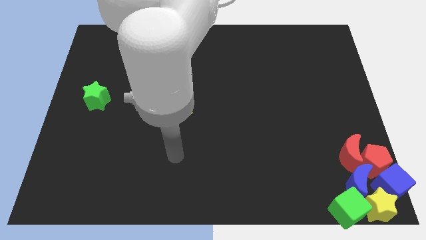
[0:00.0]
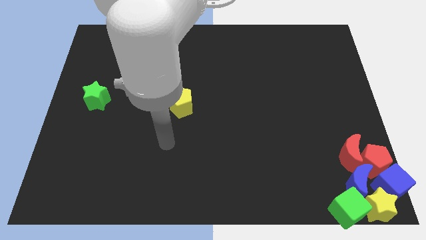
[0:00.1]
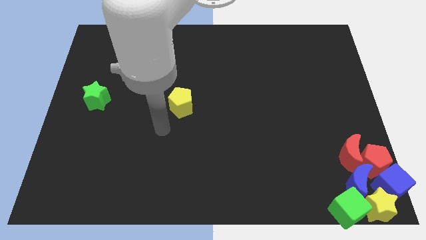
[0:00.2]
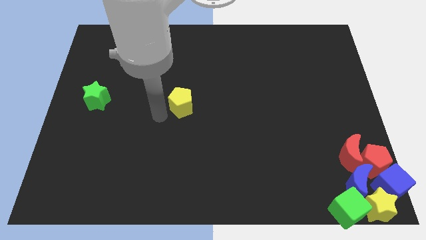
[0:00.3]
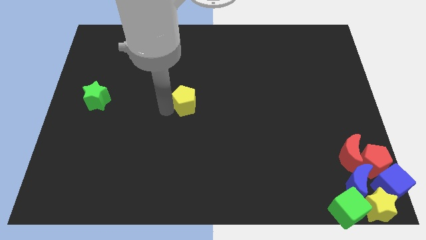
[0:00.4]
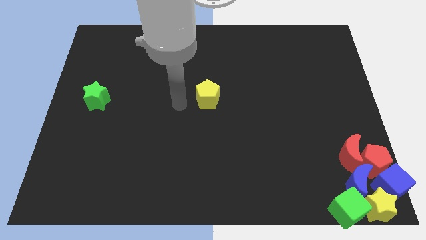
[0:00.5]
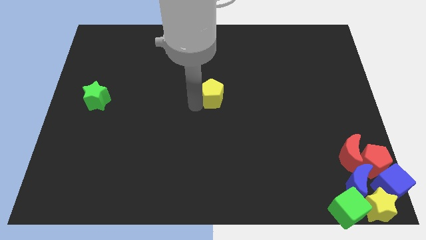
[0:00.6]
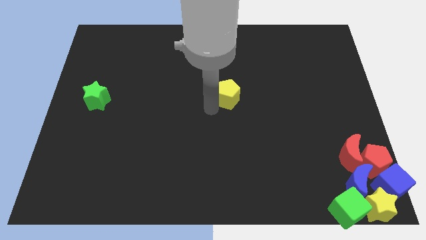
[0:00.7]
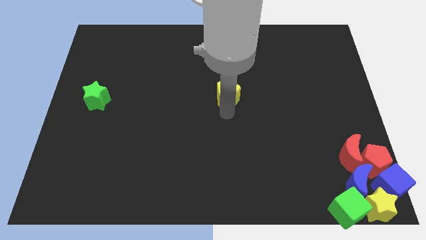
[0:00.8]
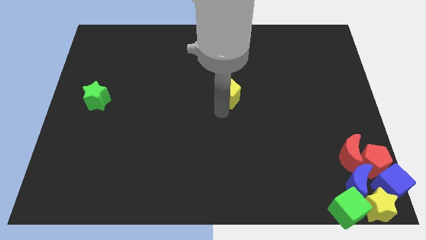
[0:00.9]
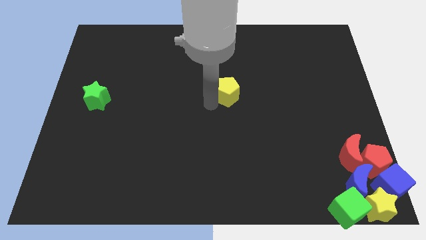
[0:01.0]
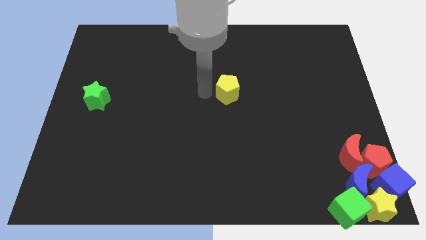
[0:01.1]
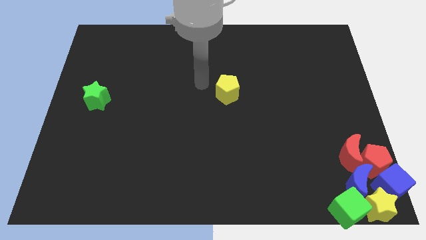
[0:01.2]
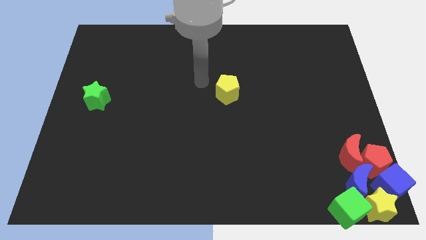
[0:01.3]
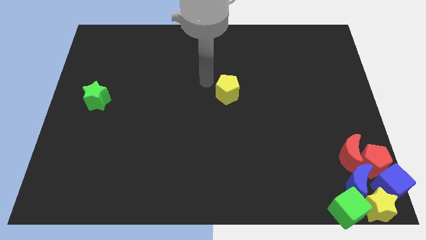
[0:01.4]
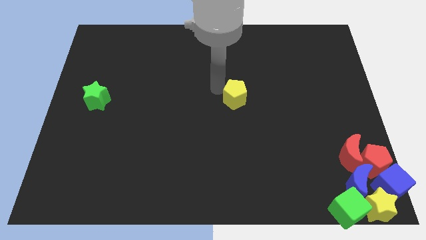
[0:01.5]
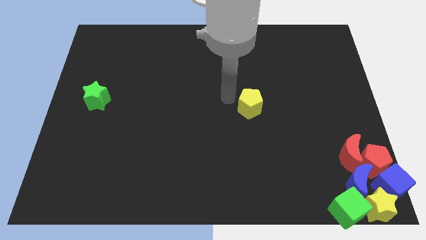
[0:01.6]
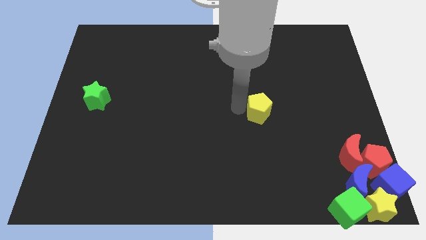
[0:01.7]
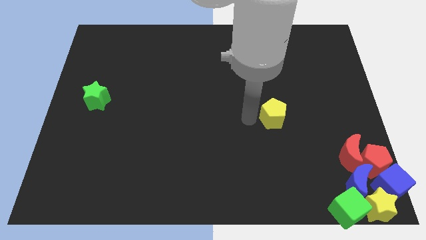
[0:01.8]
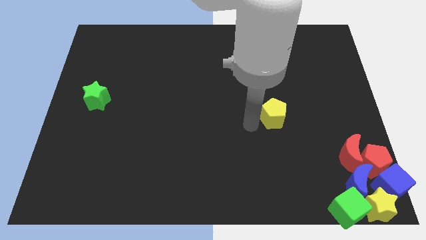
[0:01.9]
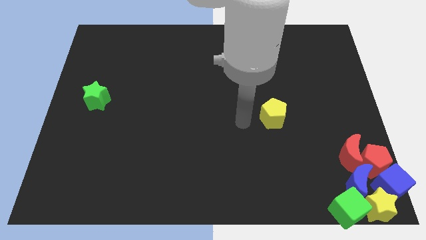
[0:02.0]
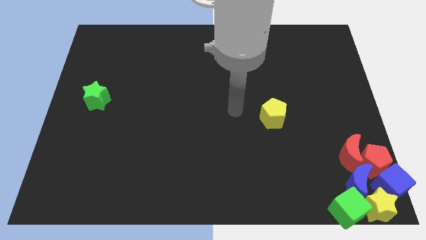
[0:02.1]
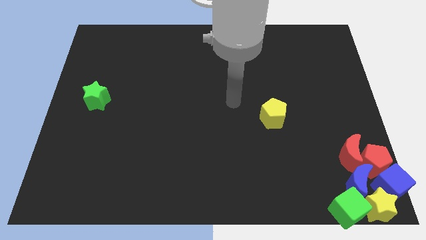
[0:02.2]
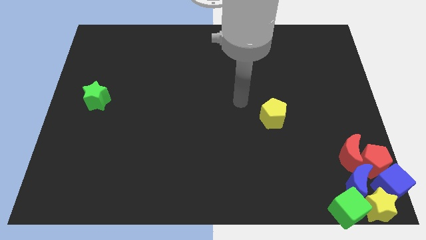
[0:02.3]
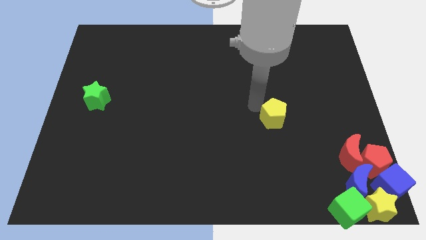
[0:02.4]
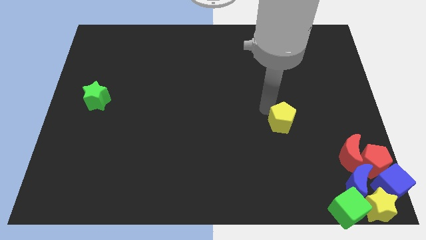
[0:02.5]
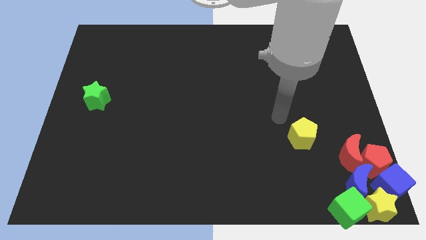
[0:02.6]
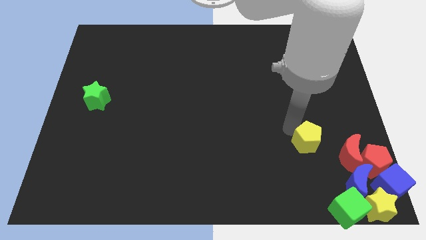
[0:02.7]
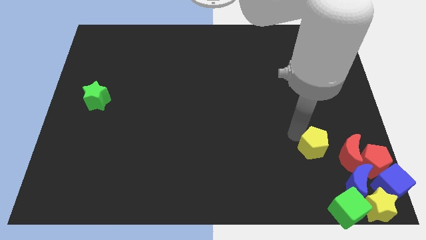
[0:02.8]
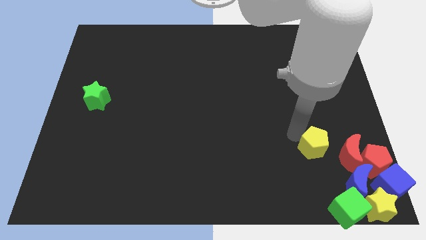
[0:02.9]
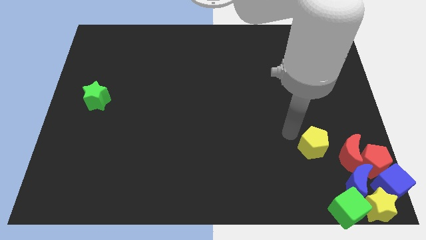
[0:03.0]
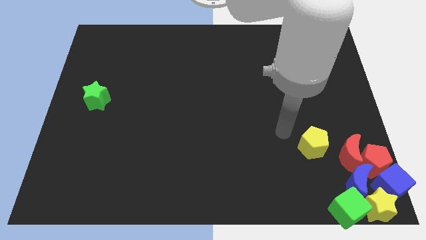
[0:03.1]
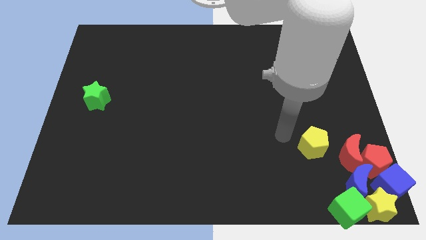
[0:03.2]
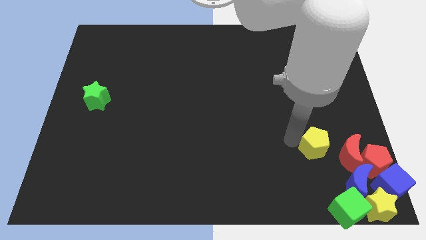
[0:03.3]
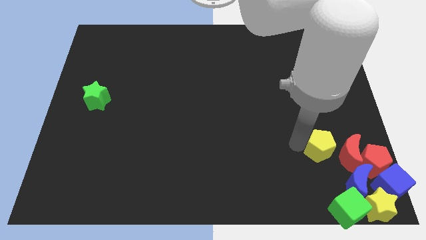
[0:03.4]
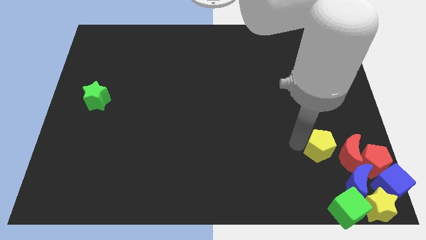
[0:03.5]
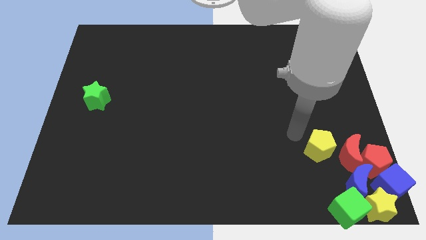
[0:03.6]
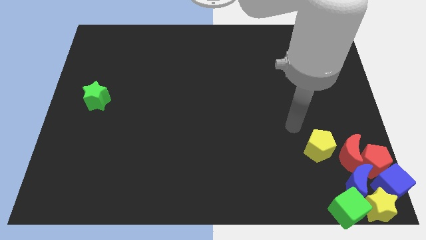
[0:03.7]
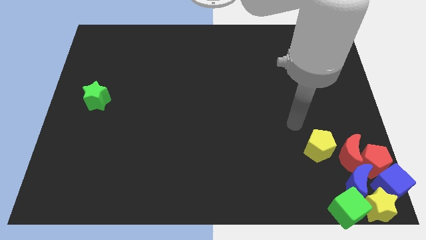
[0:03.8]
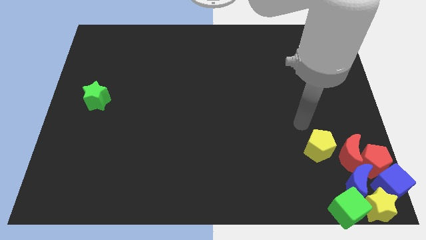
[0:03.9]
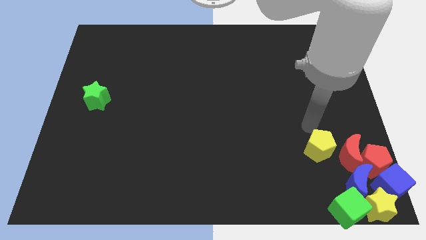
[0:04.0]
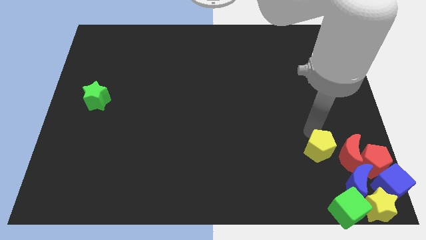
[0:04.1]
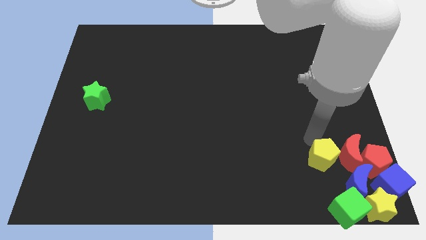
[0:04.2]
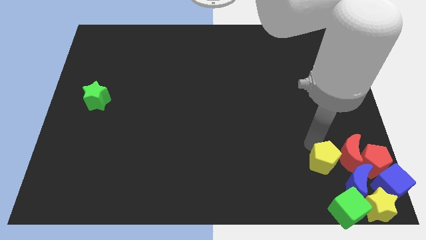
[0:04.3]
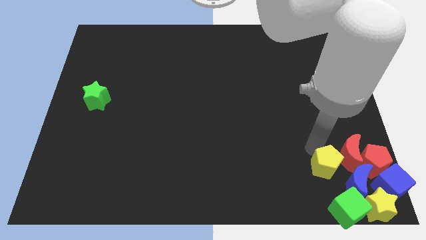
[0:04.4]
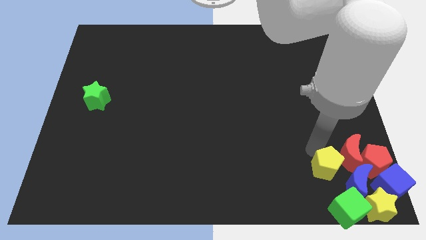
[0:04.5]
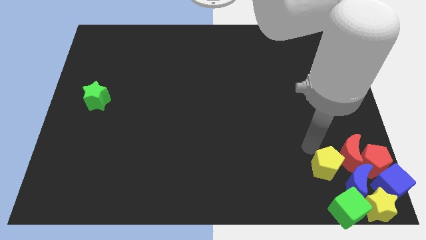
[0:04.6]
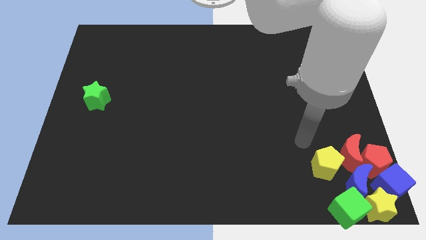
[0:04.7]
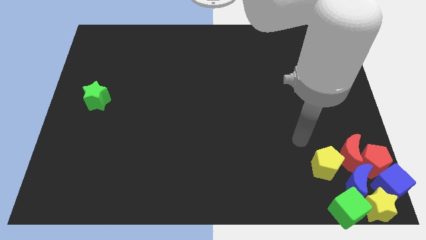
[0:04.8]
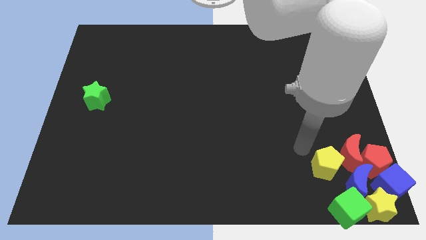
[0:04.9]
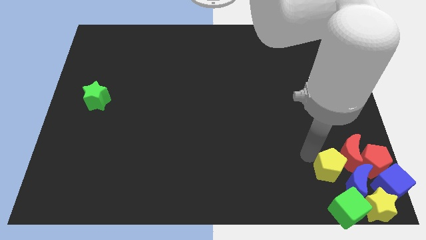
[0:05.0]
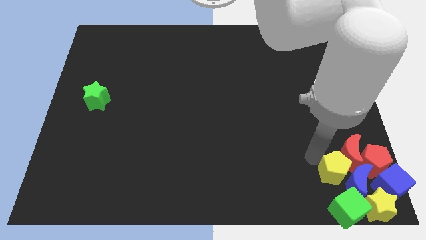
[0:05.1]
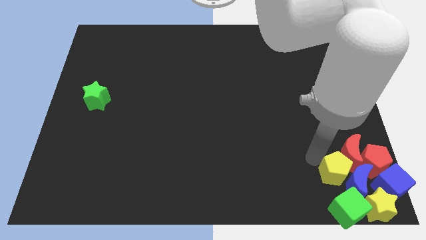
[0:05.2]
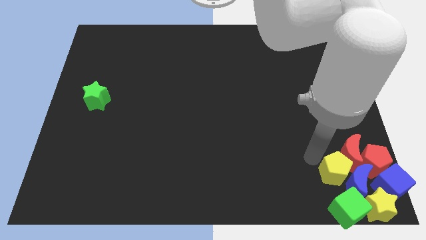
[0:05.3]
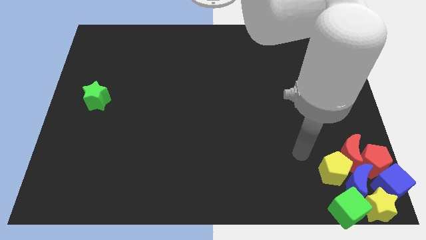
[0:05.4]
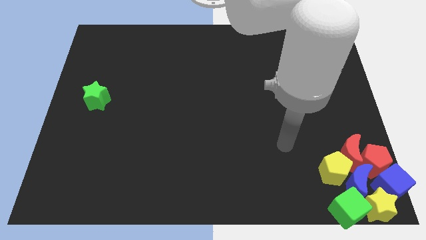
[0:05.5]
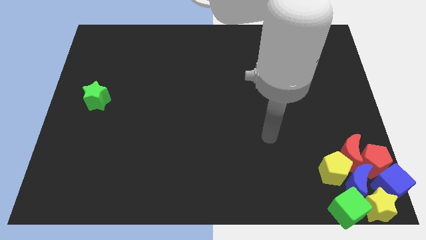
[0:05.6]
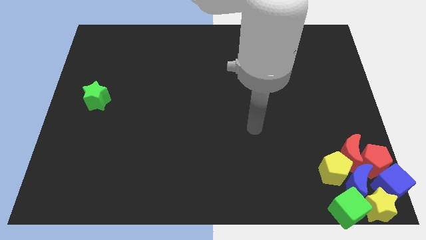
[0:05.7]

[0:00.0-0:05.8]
push the yellow pentagon into the red crescent and red pentagon

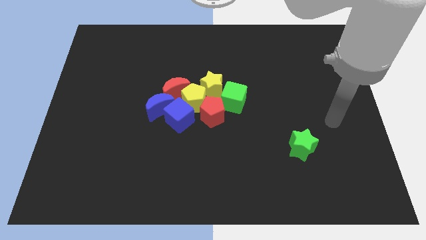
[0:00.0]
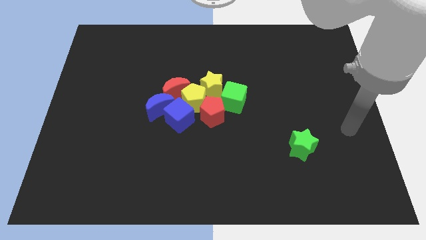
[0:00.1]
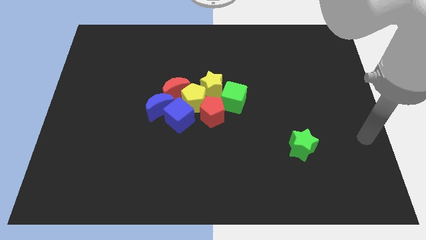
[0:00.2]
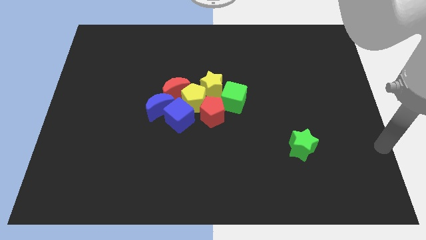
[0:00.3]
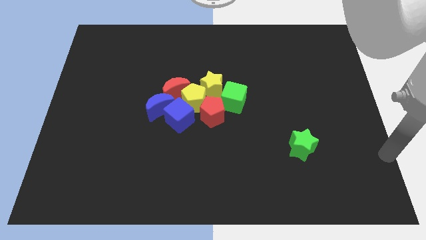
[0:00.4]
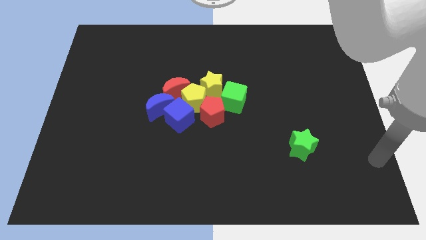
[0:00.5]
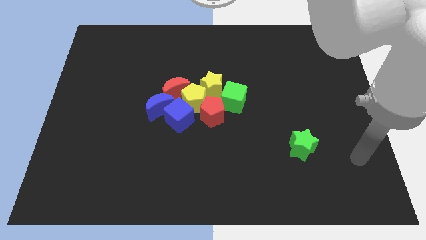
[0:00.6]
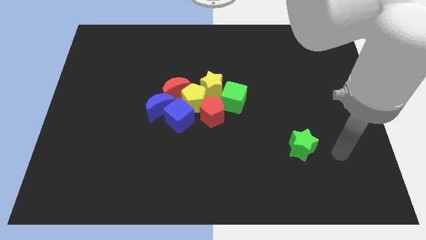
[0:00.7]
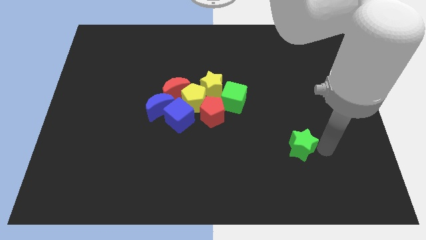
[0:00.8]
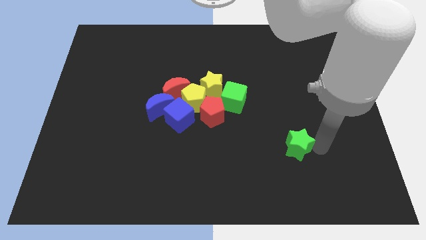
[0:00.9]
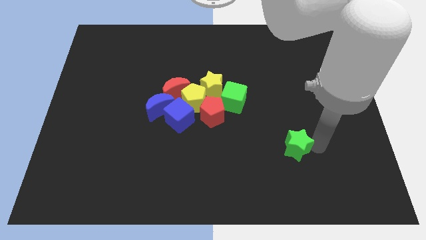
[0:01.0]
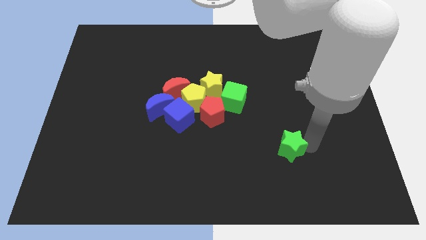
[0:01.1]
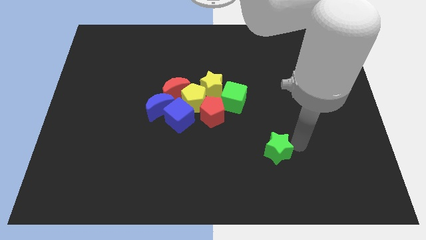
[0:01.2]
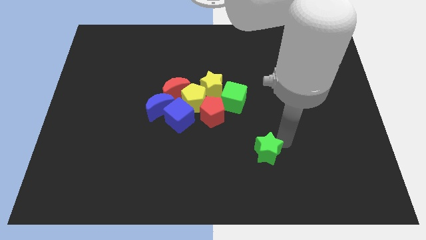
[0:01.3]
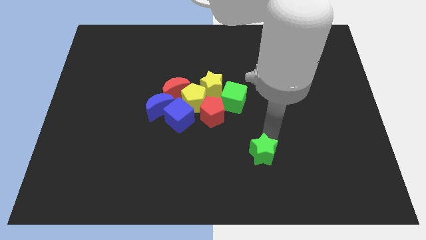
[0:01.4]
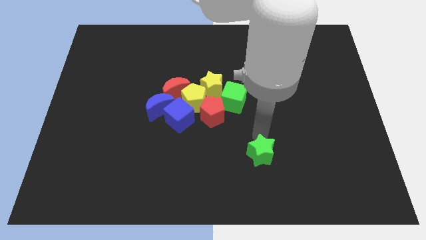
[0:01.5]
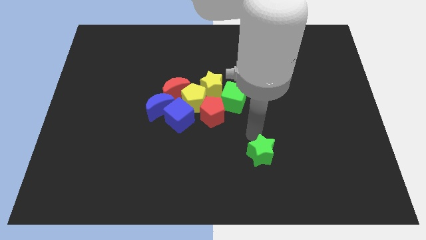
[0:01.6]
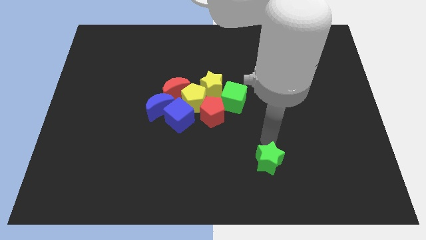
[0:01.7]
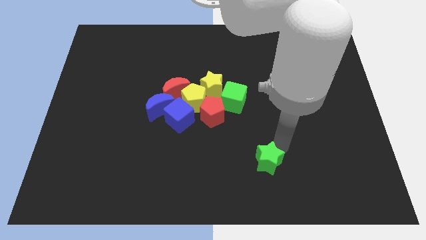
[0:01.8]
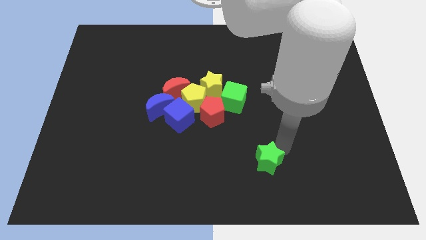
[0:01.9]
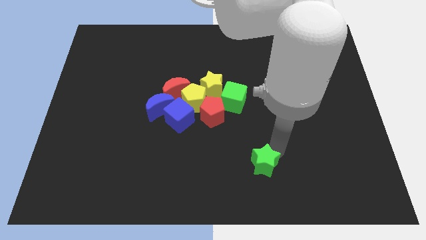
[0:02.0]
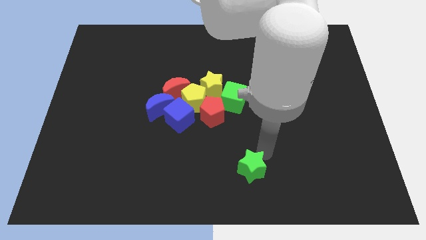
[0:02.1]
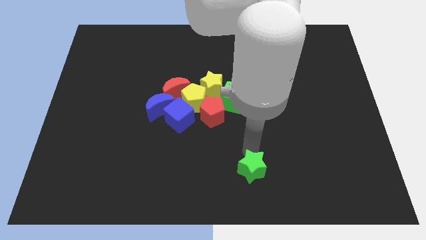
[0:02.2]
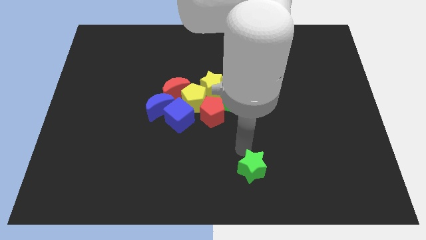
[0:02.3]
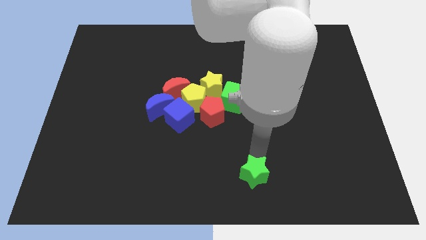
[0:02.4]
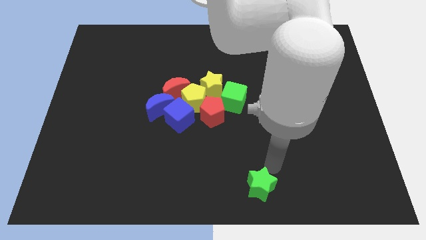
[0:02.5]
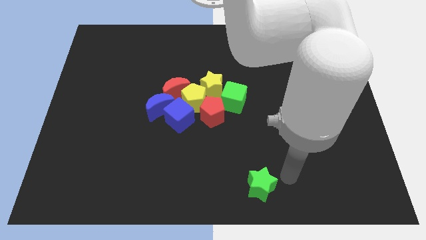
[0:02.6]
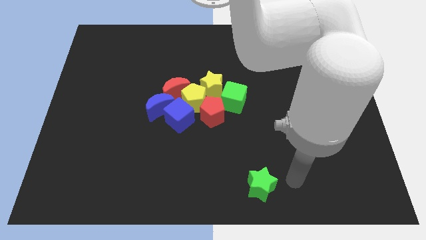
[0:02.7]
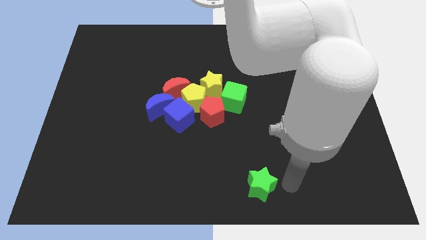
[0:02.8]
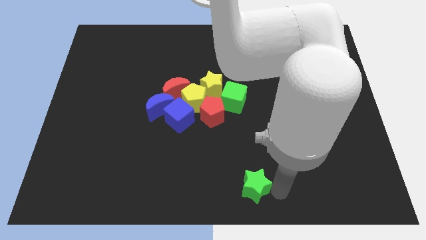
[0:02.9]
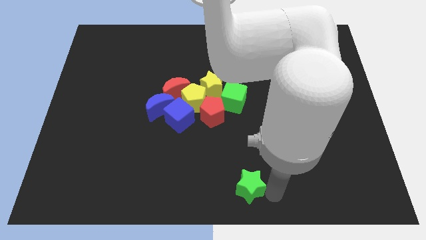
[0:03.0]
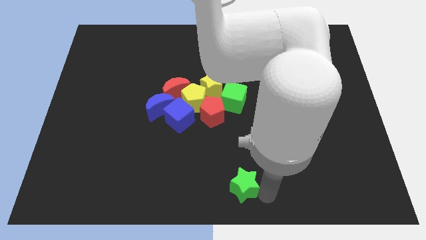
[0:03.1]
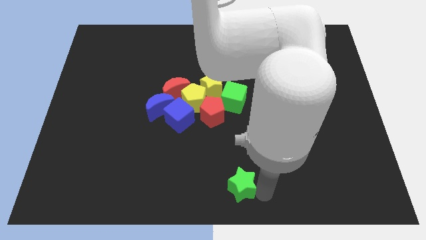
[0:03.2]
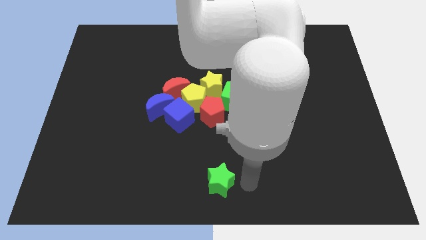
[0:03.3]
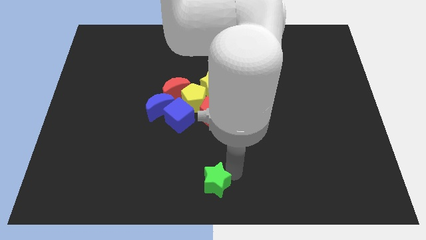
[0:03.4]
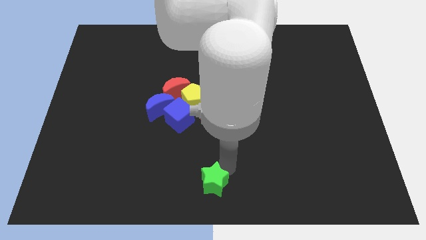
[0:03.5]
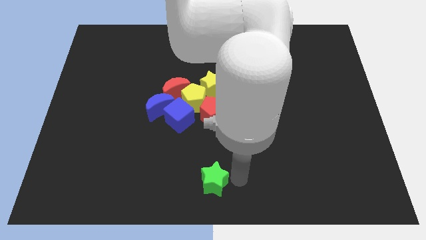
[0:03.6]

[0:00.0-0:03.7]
place the green star at bottom center
